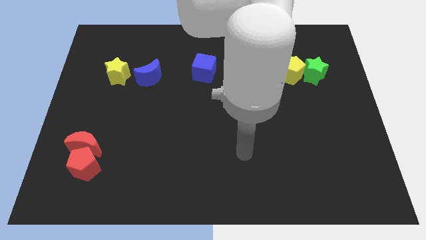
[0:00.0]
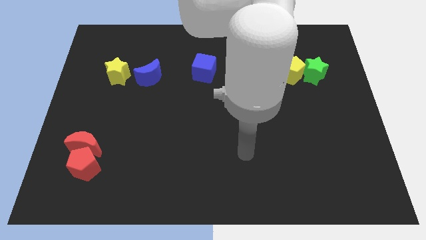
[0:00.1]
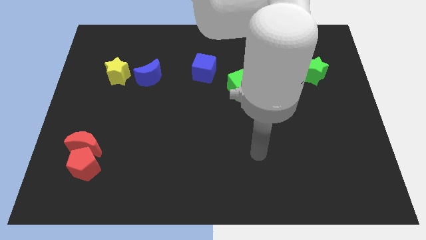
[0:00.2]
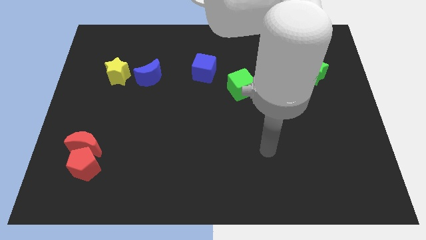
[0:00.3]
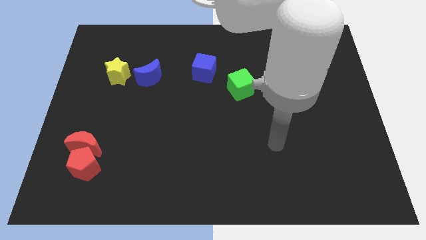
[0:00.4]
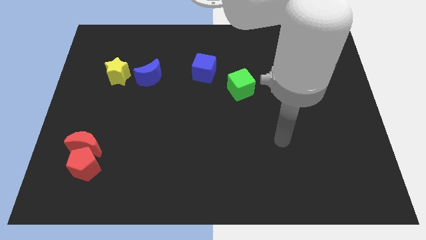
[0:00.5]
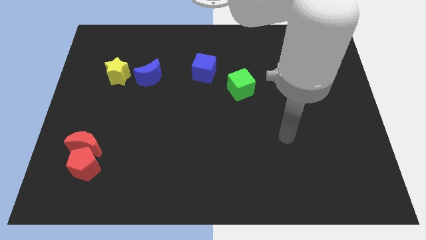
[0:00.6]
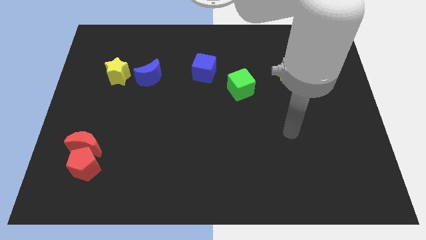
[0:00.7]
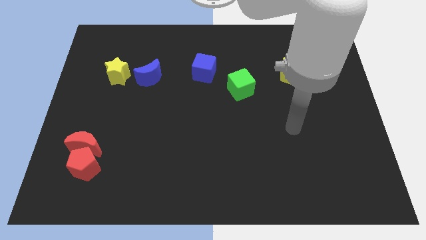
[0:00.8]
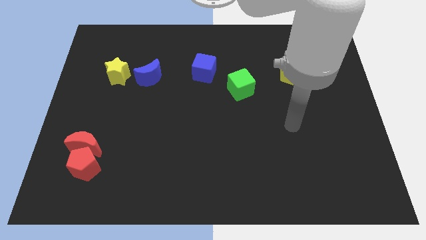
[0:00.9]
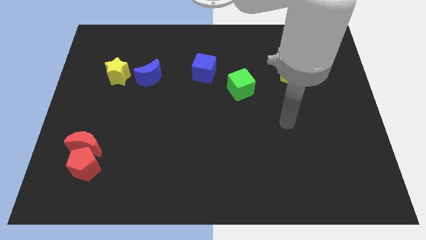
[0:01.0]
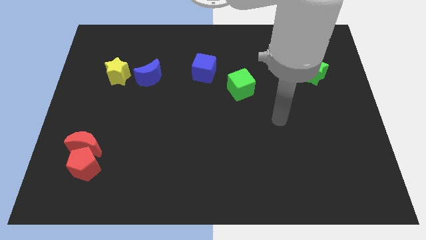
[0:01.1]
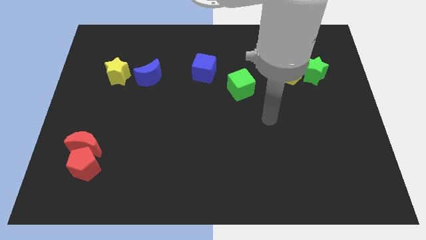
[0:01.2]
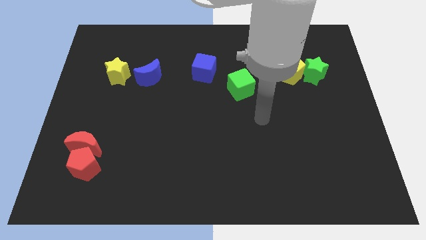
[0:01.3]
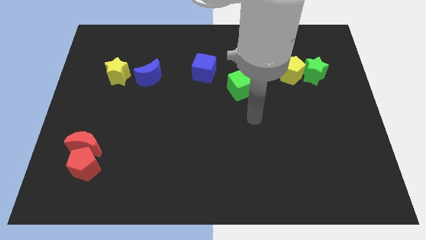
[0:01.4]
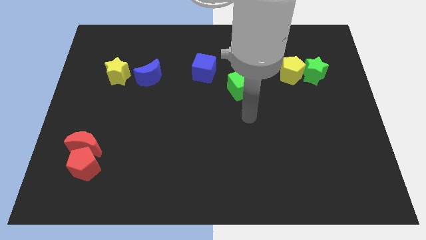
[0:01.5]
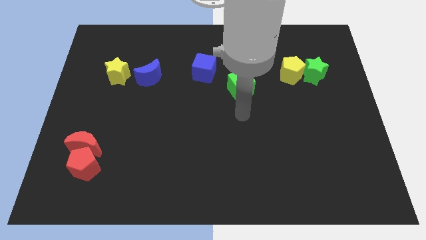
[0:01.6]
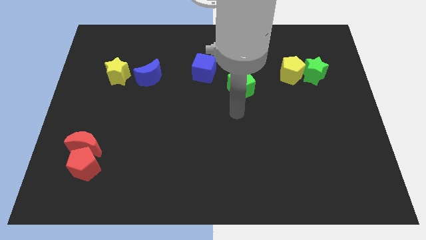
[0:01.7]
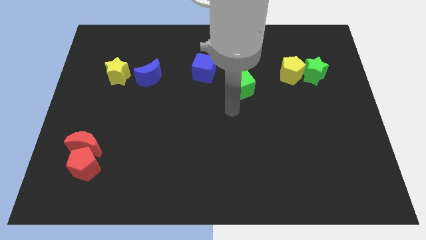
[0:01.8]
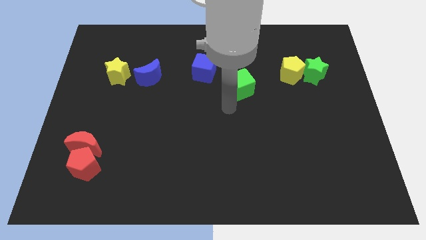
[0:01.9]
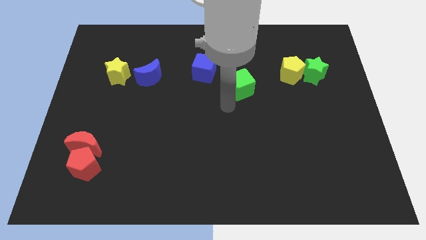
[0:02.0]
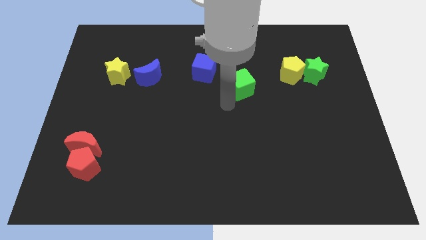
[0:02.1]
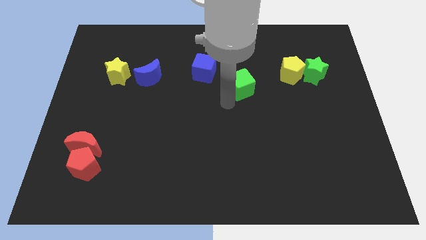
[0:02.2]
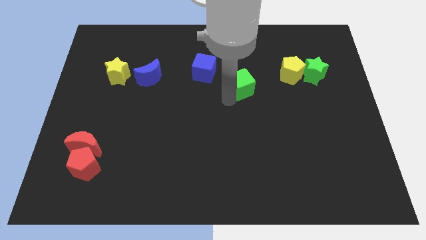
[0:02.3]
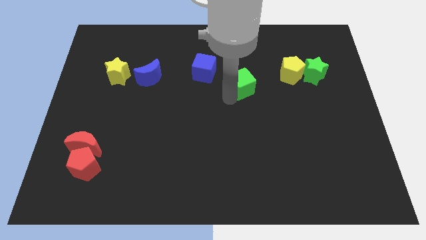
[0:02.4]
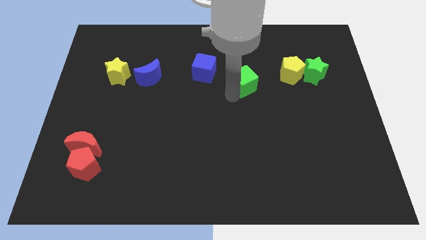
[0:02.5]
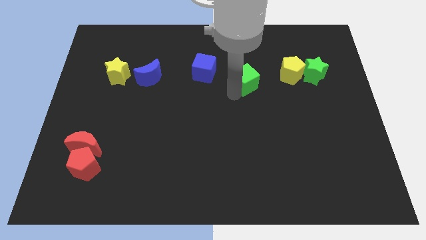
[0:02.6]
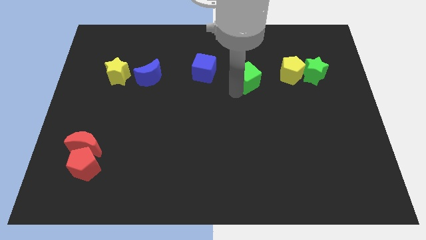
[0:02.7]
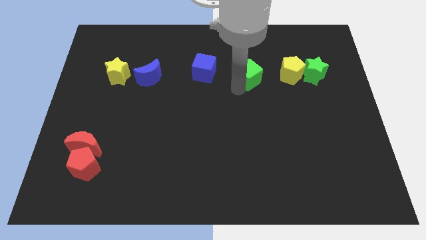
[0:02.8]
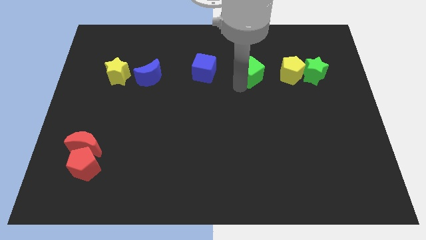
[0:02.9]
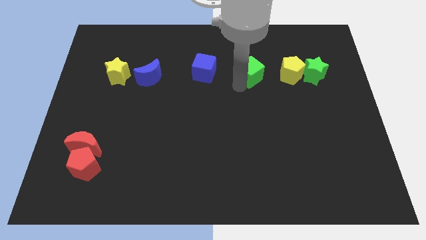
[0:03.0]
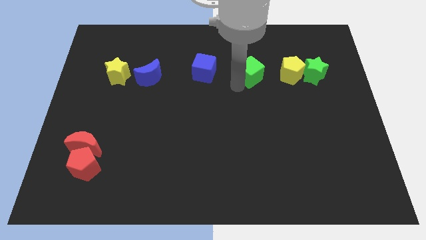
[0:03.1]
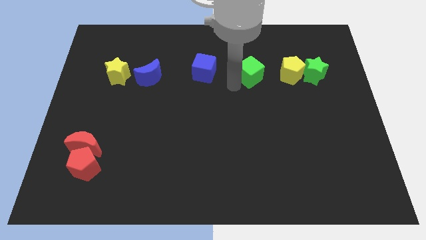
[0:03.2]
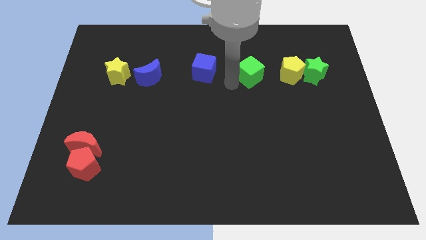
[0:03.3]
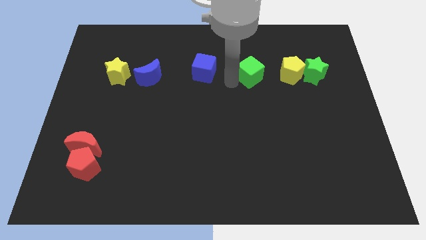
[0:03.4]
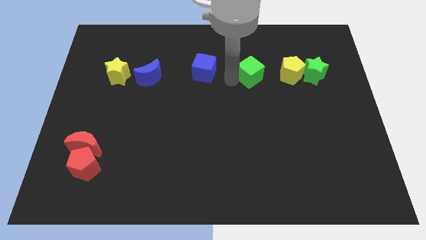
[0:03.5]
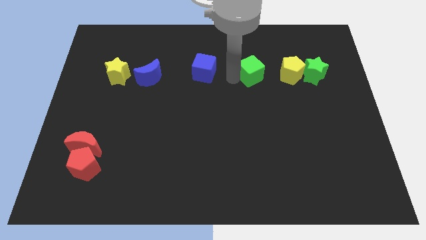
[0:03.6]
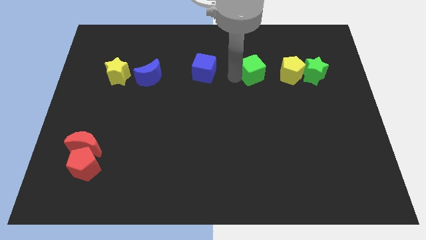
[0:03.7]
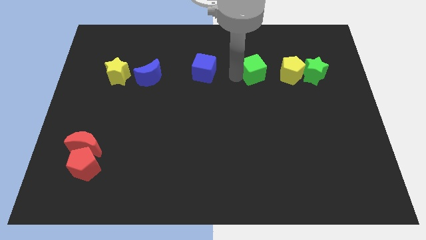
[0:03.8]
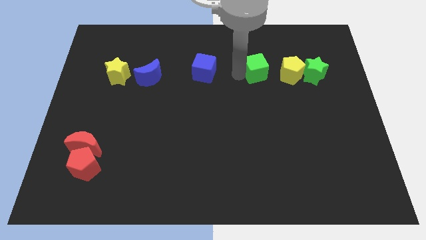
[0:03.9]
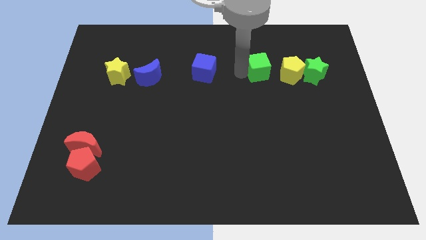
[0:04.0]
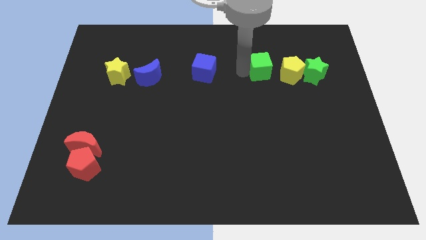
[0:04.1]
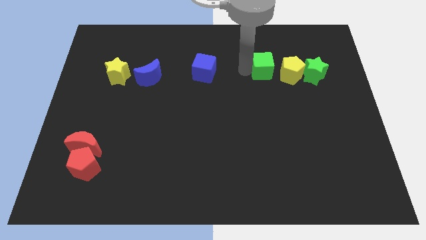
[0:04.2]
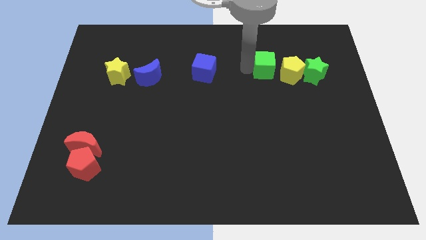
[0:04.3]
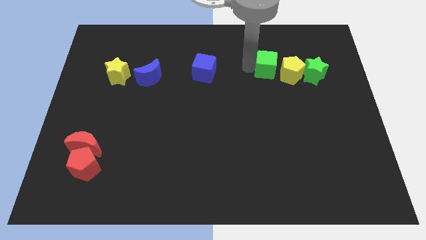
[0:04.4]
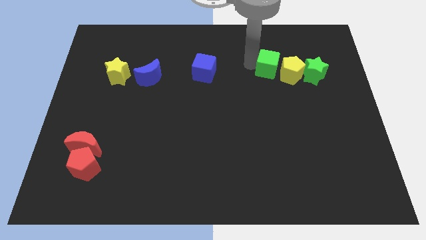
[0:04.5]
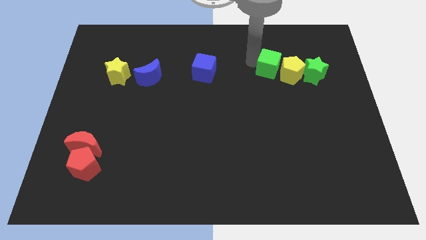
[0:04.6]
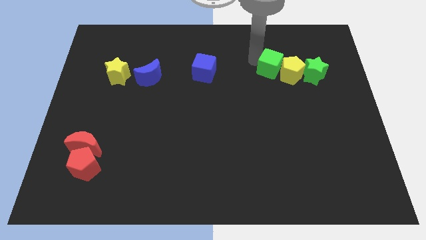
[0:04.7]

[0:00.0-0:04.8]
push the green cube to the yellow pentagon

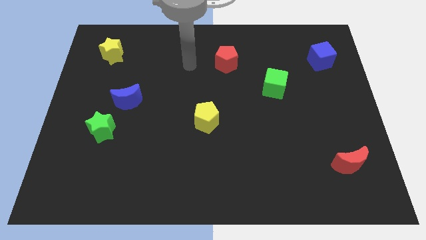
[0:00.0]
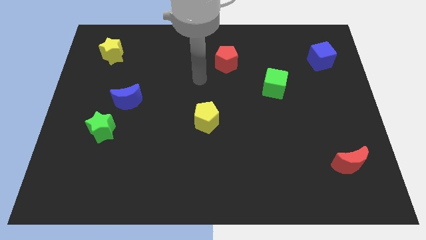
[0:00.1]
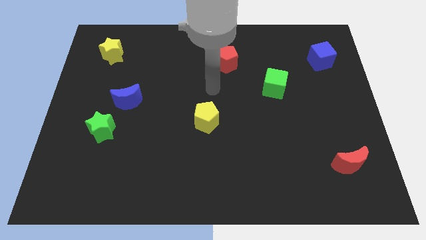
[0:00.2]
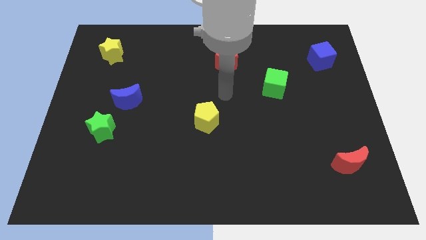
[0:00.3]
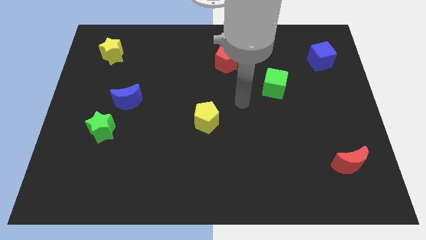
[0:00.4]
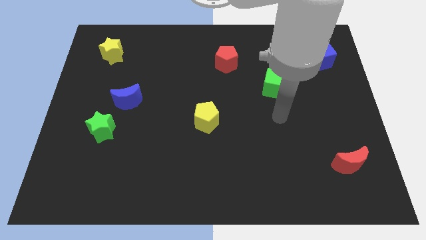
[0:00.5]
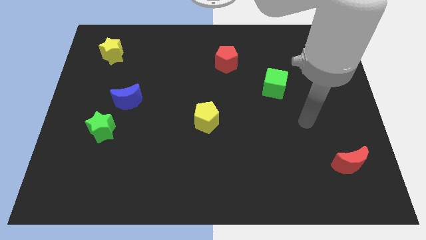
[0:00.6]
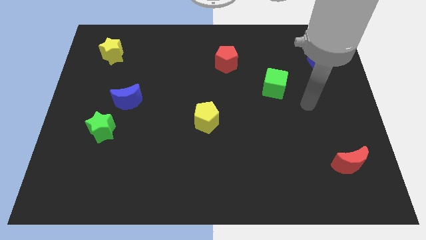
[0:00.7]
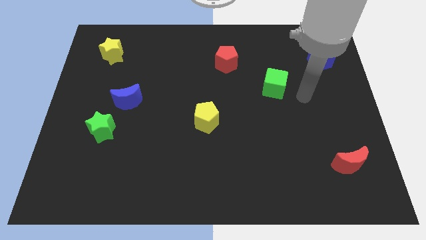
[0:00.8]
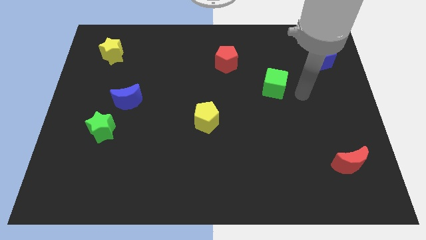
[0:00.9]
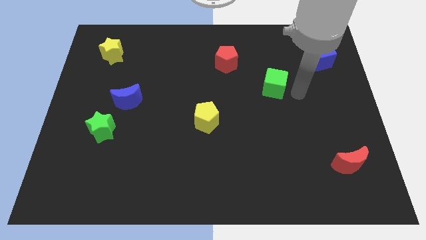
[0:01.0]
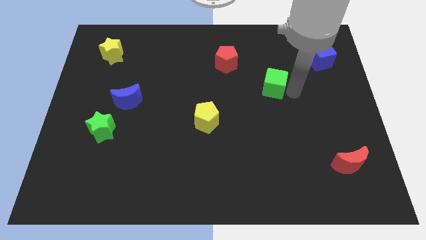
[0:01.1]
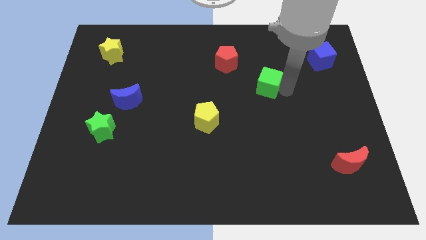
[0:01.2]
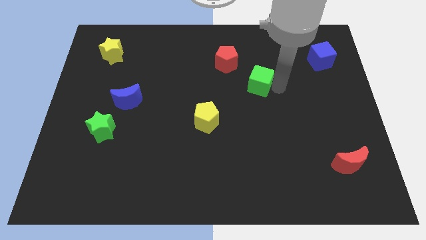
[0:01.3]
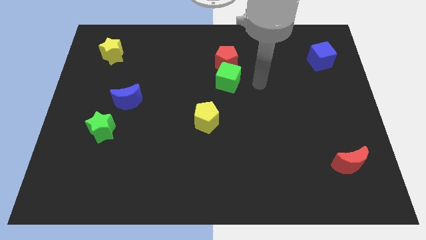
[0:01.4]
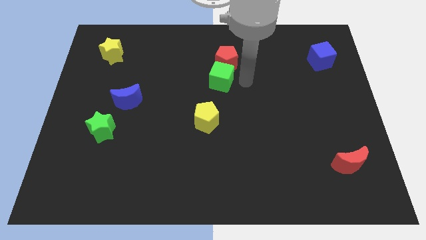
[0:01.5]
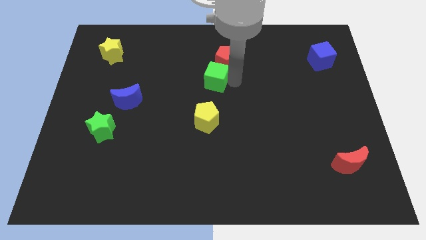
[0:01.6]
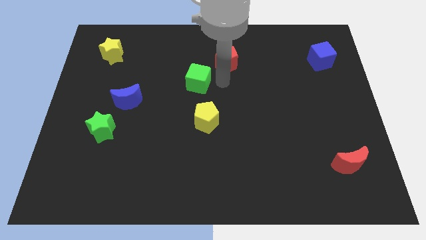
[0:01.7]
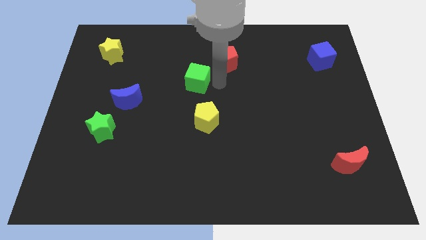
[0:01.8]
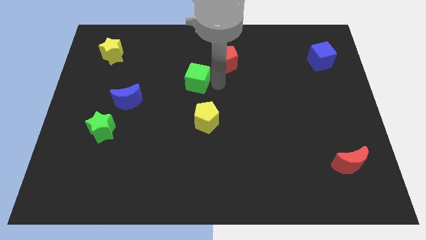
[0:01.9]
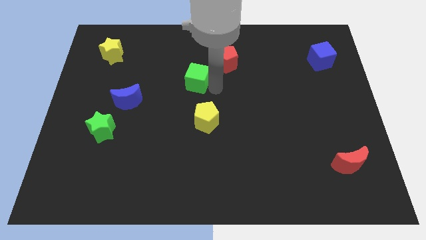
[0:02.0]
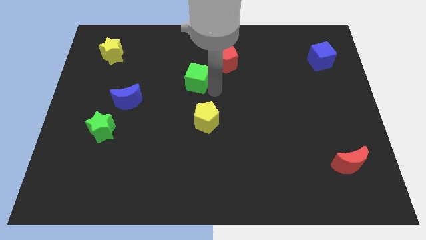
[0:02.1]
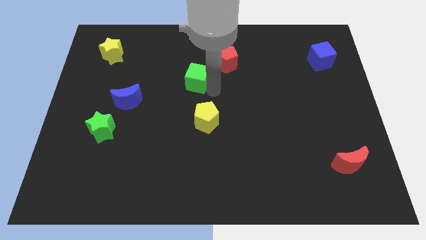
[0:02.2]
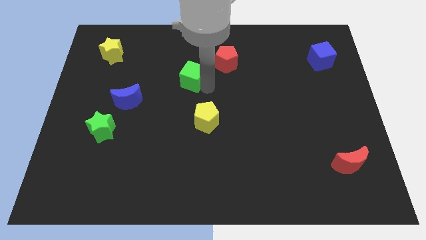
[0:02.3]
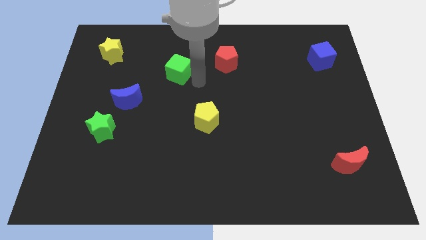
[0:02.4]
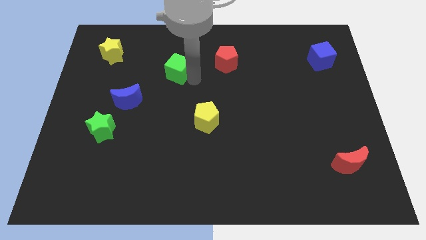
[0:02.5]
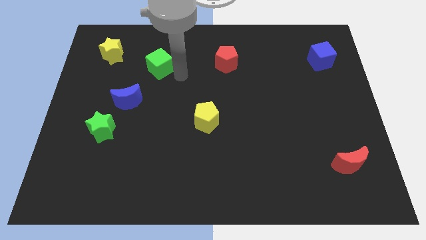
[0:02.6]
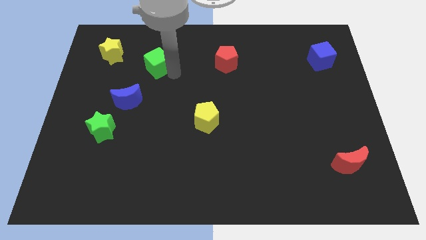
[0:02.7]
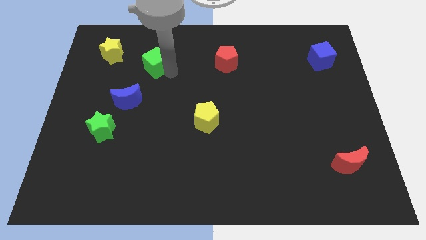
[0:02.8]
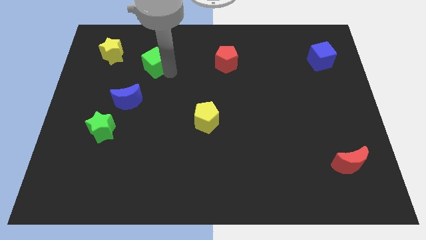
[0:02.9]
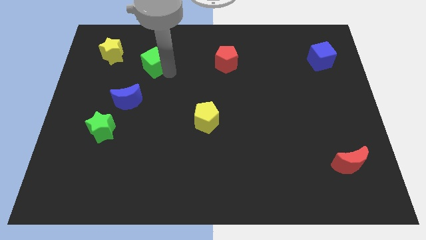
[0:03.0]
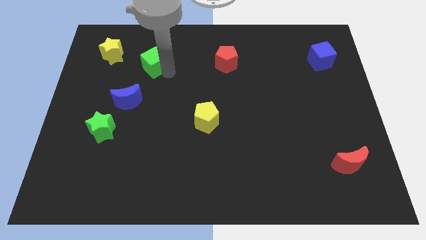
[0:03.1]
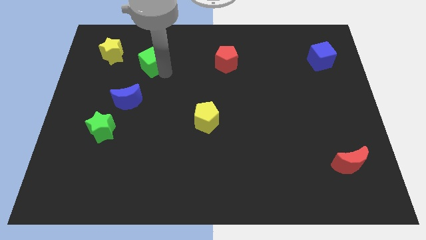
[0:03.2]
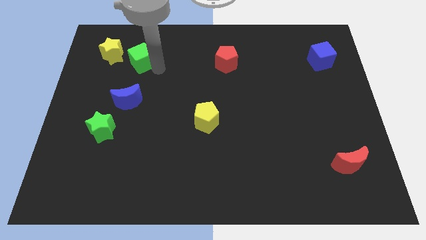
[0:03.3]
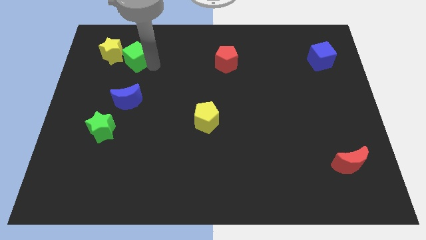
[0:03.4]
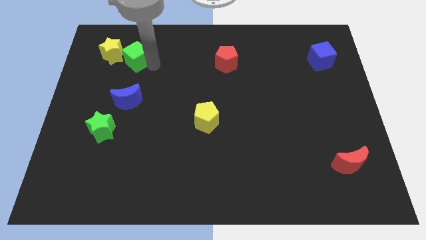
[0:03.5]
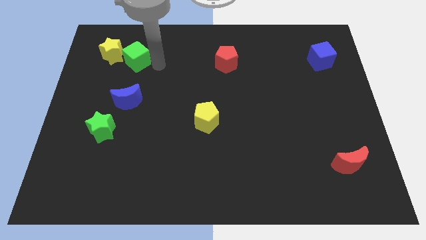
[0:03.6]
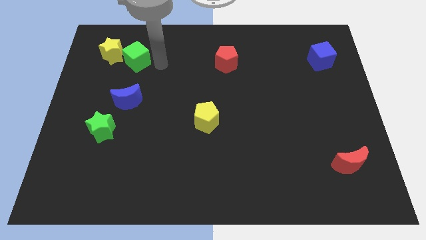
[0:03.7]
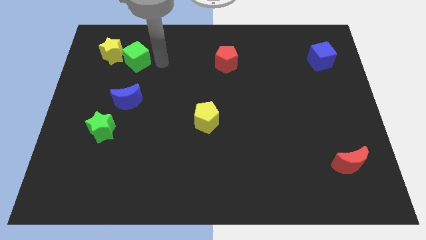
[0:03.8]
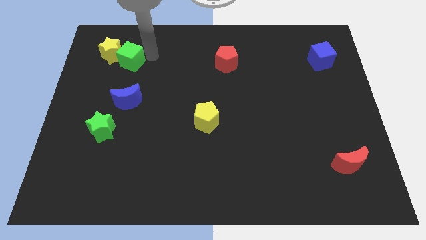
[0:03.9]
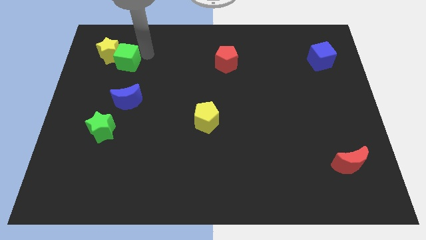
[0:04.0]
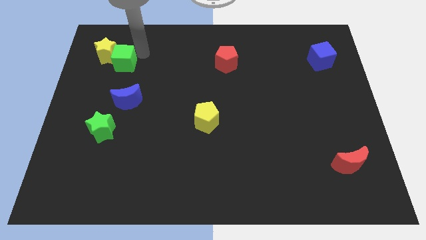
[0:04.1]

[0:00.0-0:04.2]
move the green cube next to the yellow star
